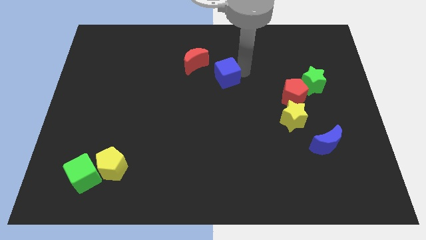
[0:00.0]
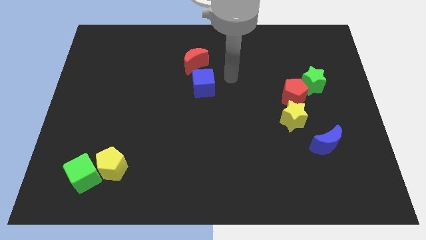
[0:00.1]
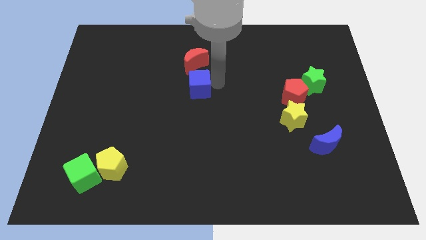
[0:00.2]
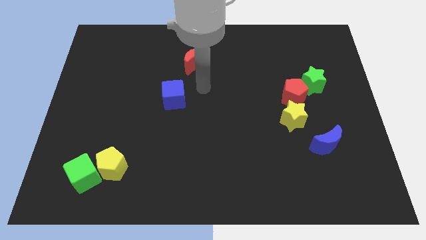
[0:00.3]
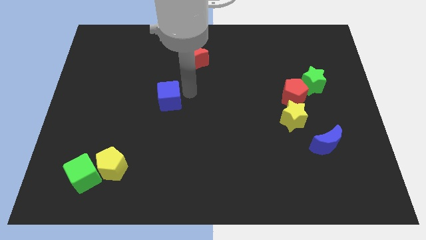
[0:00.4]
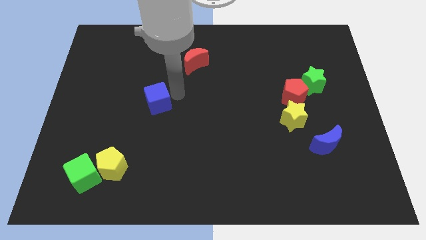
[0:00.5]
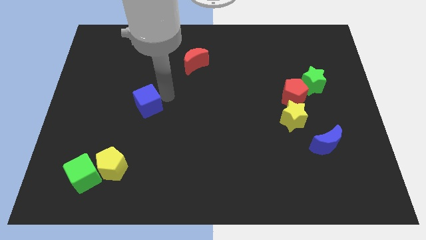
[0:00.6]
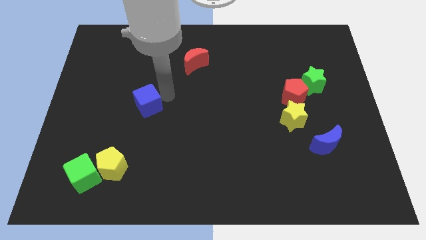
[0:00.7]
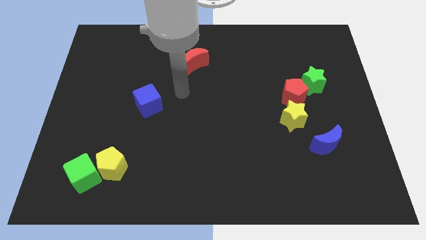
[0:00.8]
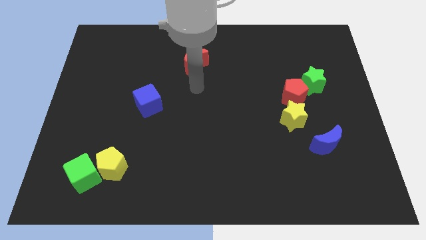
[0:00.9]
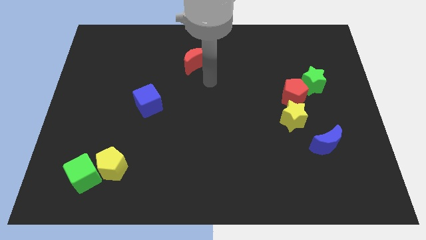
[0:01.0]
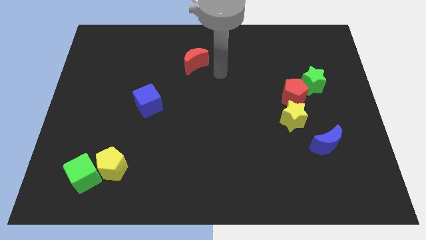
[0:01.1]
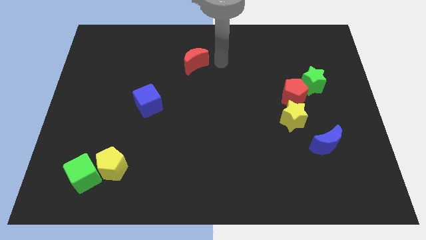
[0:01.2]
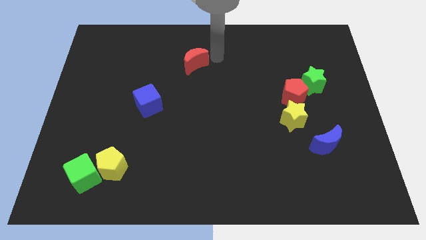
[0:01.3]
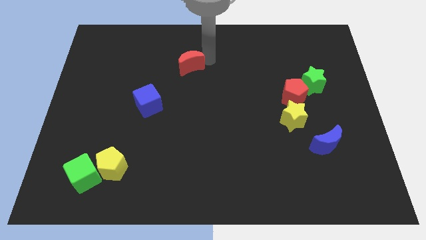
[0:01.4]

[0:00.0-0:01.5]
move the blue cube diagoonally to the yellow pentagon

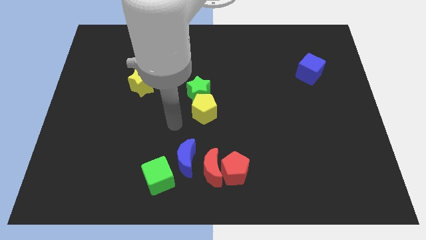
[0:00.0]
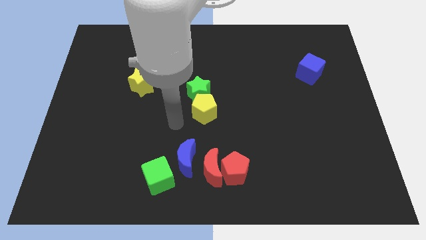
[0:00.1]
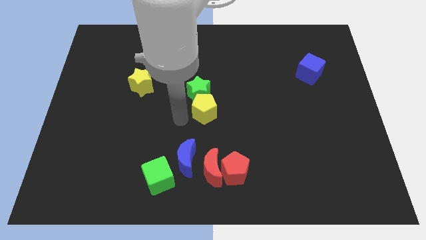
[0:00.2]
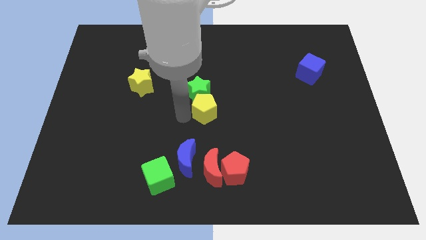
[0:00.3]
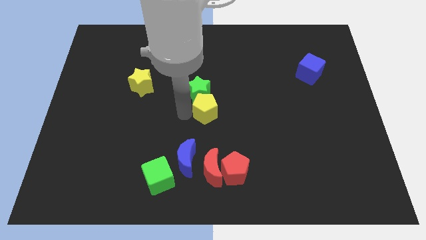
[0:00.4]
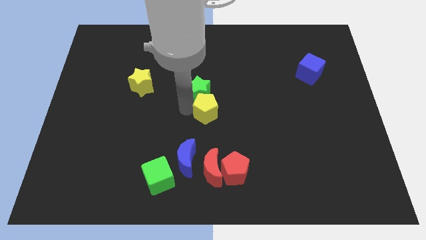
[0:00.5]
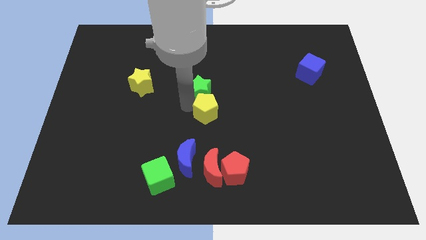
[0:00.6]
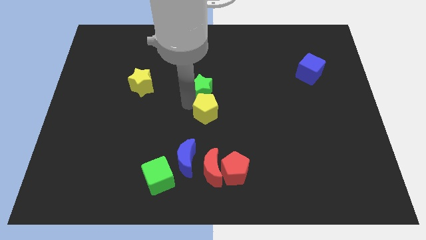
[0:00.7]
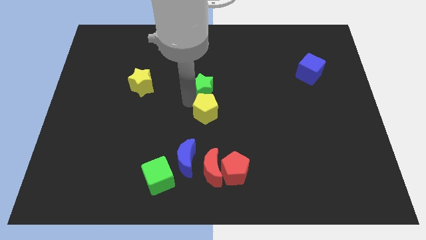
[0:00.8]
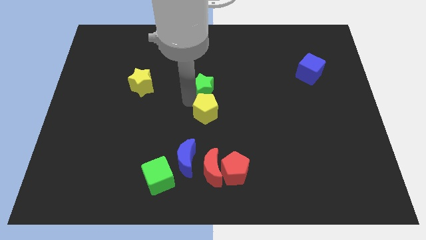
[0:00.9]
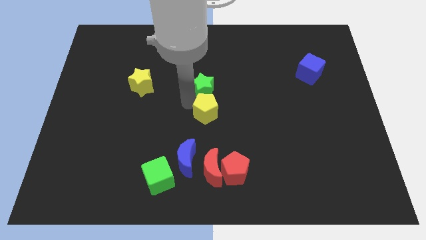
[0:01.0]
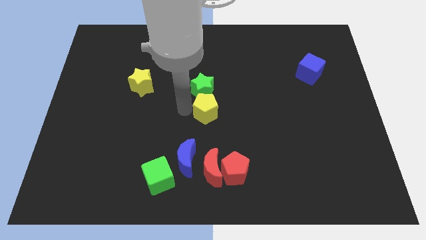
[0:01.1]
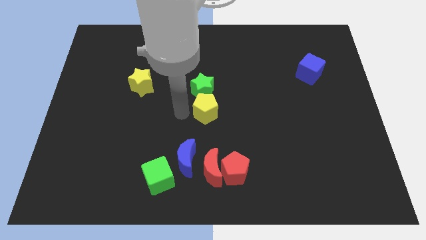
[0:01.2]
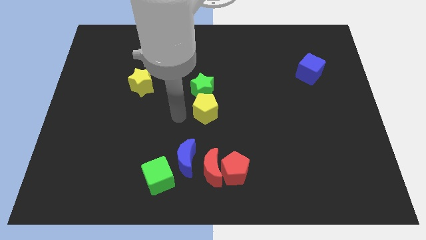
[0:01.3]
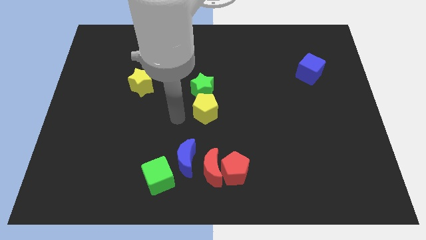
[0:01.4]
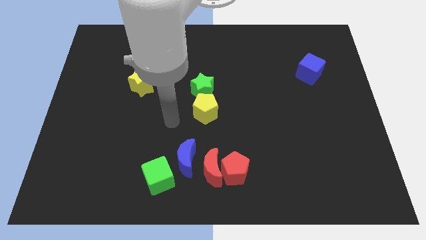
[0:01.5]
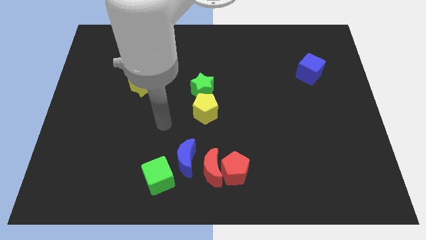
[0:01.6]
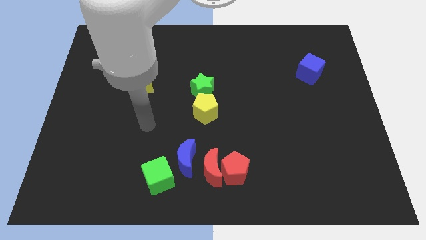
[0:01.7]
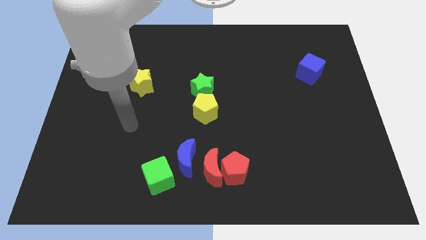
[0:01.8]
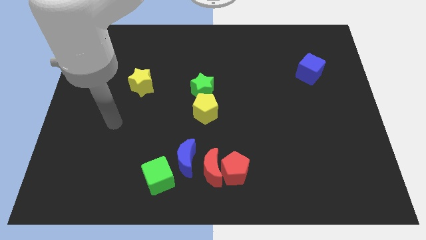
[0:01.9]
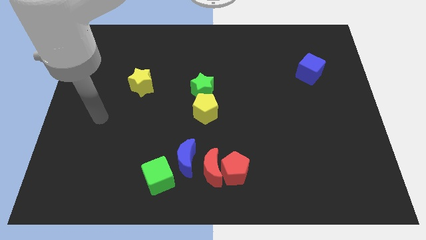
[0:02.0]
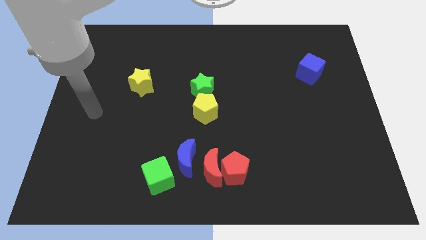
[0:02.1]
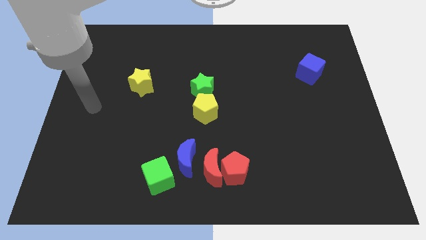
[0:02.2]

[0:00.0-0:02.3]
move the green star slightly to the top

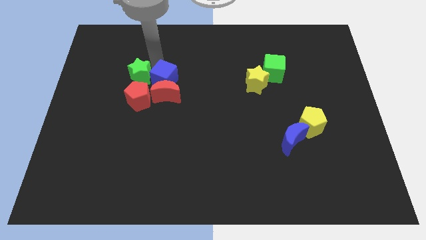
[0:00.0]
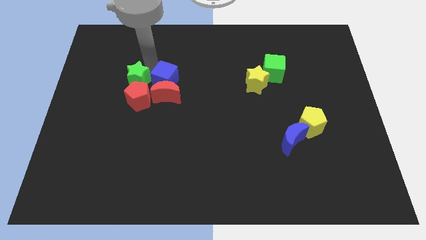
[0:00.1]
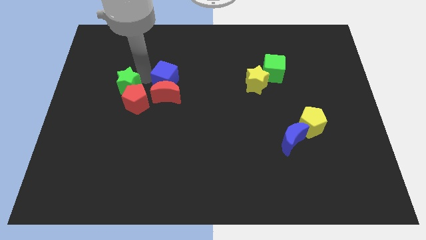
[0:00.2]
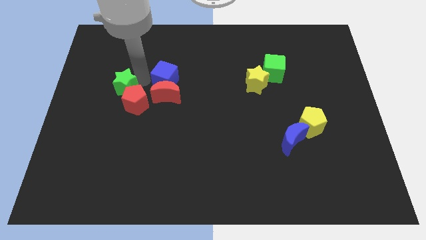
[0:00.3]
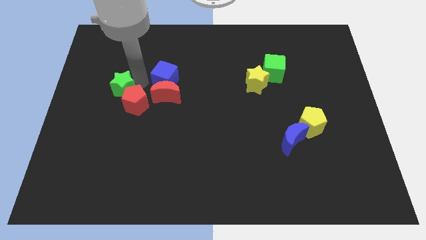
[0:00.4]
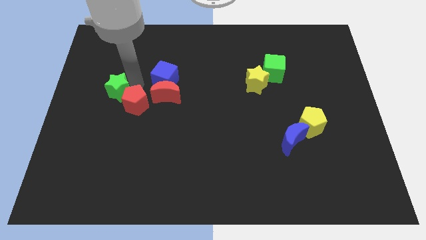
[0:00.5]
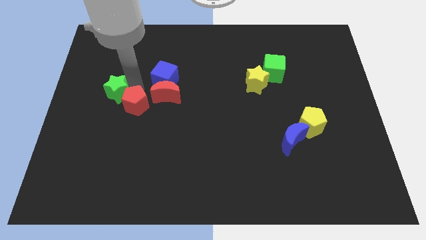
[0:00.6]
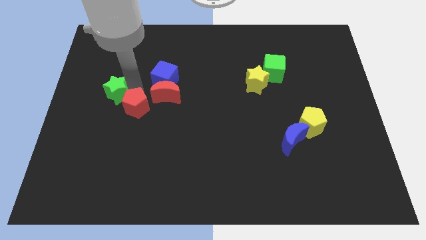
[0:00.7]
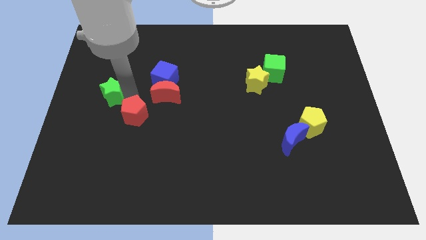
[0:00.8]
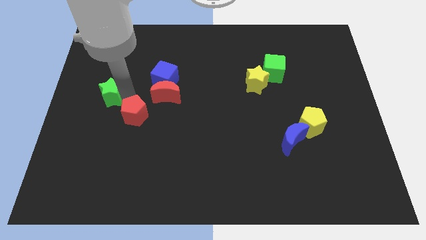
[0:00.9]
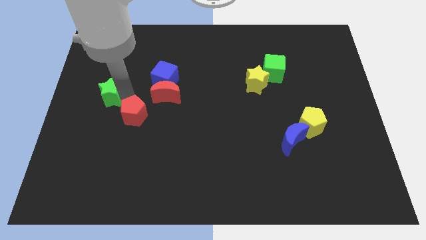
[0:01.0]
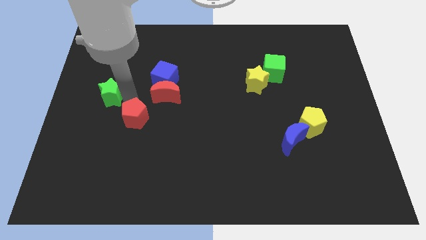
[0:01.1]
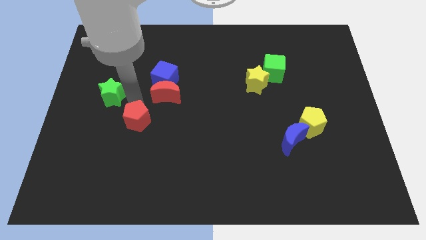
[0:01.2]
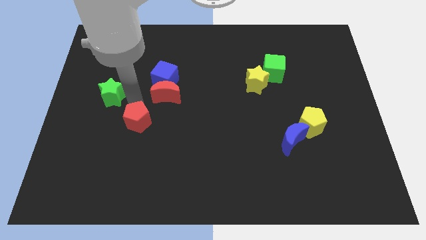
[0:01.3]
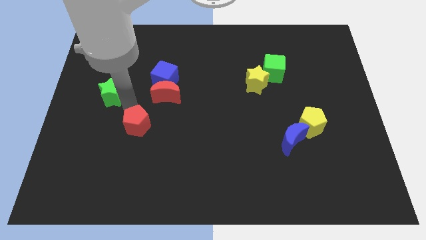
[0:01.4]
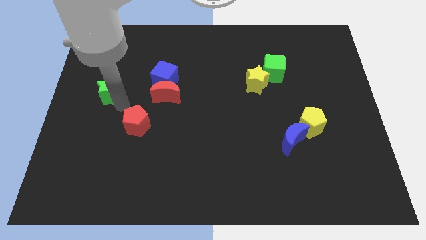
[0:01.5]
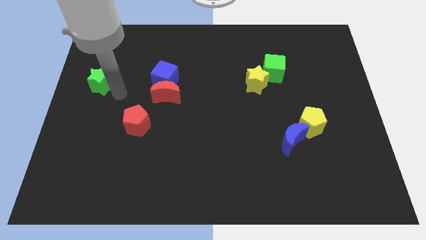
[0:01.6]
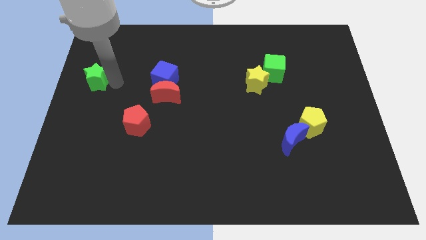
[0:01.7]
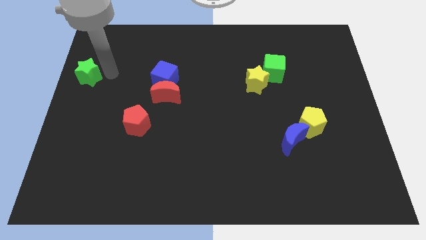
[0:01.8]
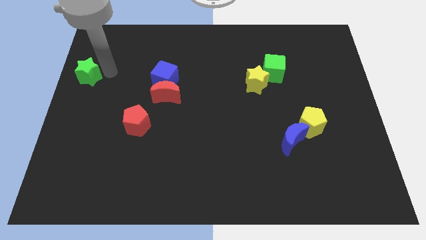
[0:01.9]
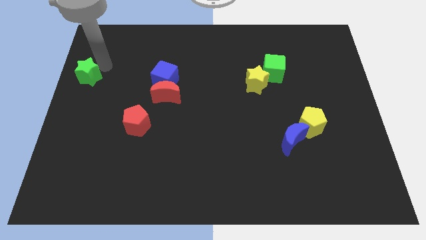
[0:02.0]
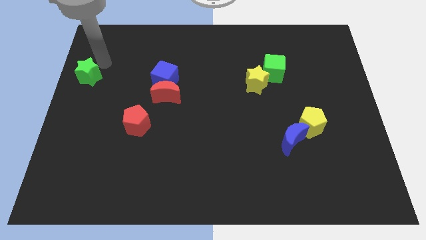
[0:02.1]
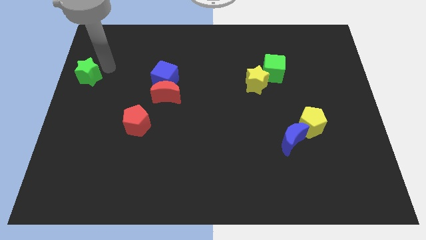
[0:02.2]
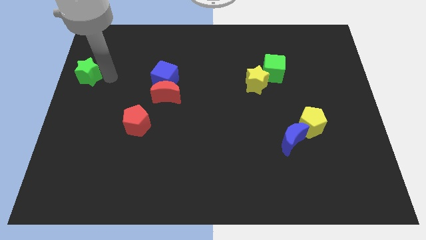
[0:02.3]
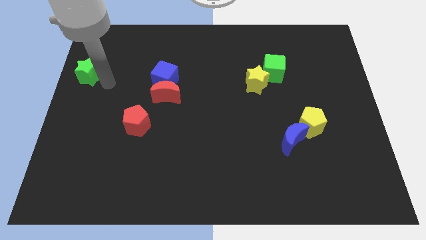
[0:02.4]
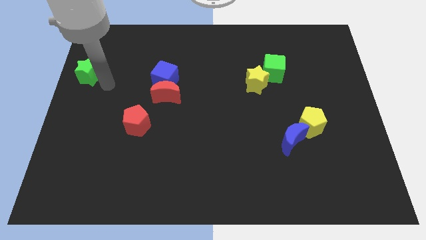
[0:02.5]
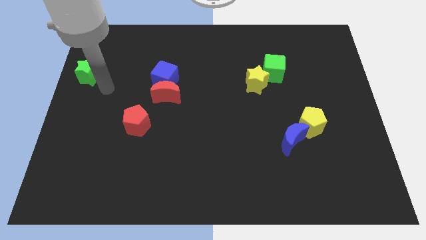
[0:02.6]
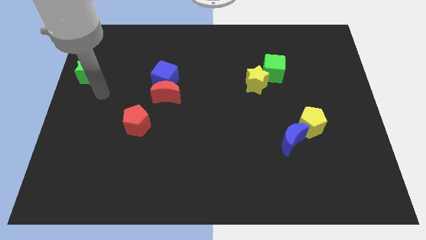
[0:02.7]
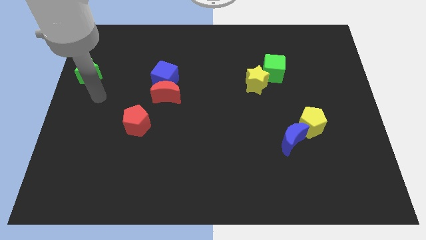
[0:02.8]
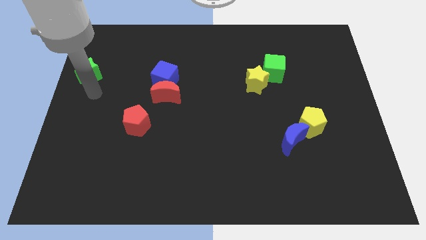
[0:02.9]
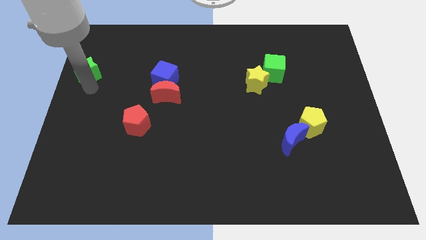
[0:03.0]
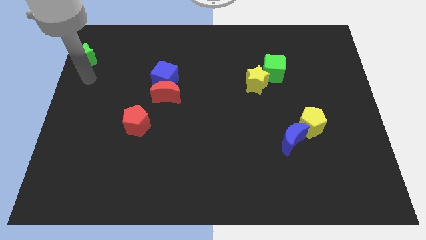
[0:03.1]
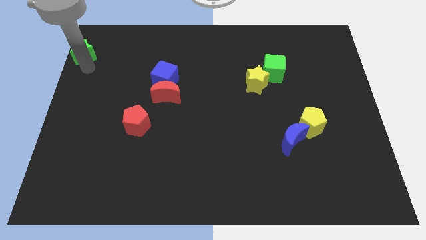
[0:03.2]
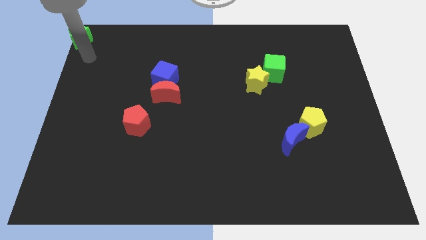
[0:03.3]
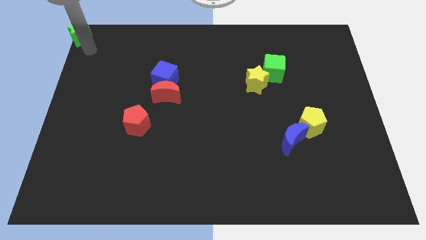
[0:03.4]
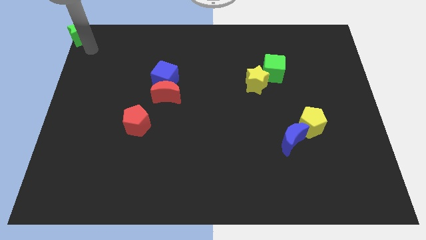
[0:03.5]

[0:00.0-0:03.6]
separate the green star and the red pentagon

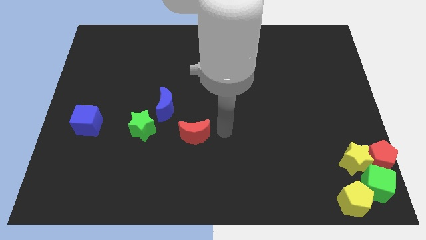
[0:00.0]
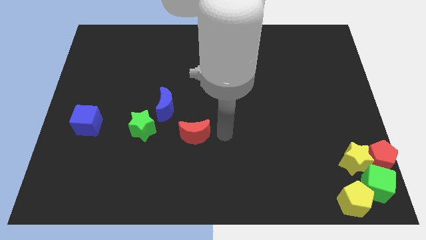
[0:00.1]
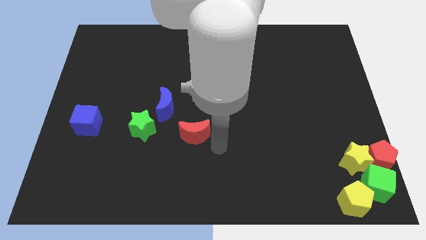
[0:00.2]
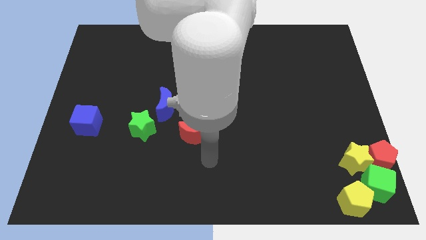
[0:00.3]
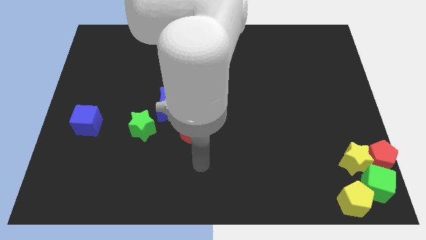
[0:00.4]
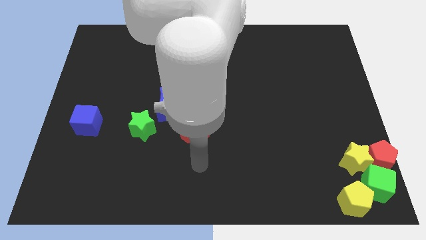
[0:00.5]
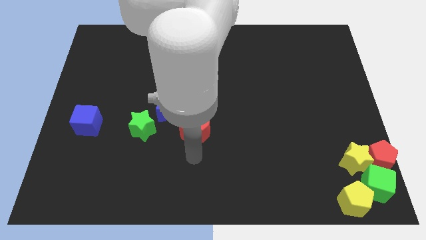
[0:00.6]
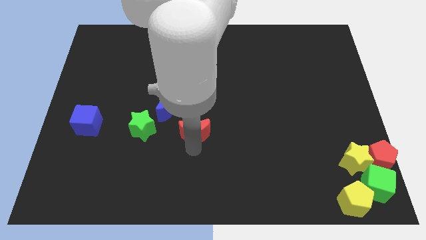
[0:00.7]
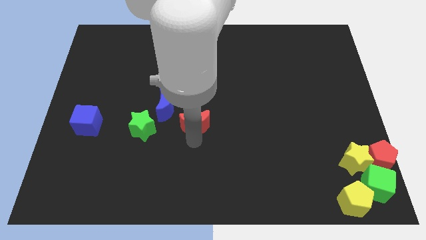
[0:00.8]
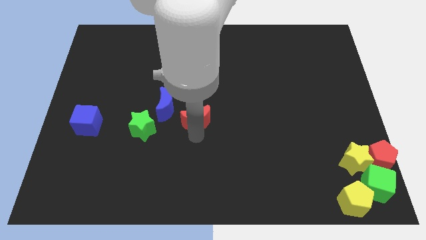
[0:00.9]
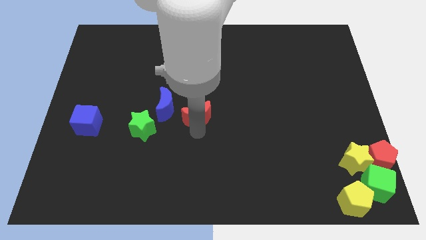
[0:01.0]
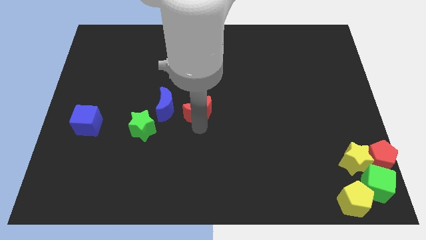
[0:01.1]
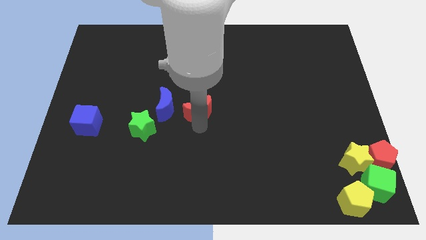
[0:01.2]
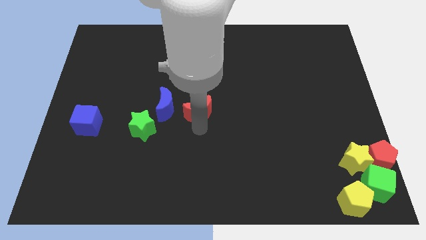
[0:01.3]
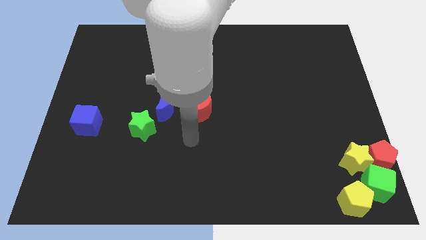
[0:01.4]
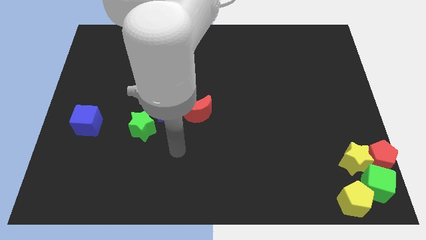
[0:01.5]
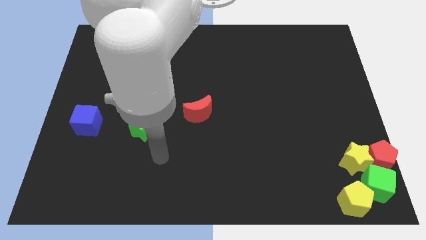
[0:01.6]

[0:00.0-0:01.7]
place the red moon to the right side of the blue moon
